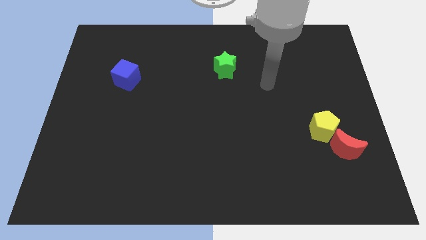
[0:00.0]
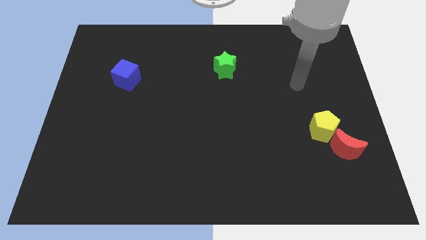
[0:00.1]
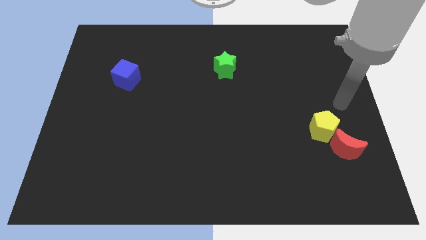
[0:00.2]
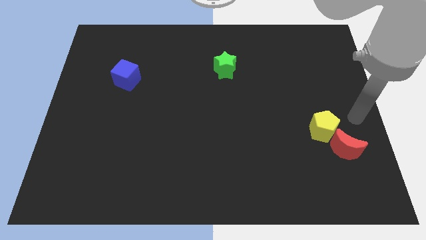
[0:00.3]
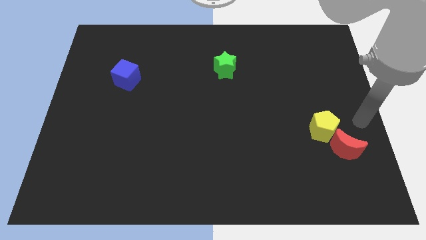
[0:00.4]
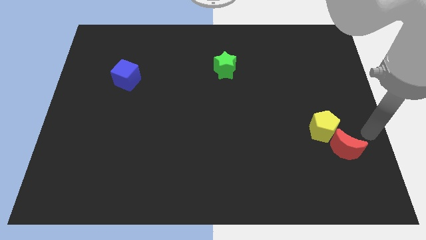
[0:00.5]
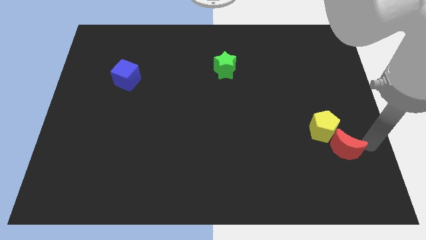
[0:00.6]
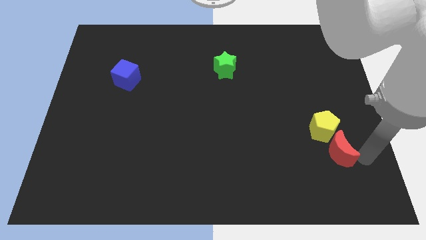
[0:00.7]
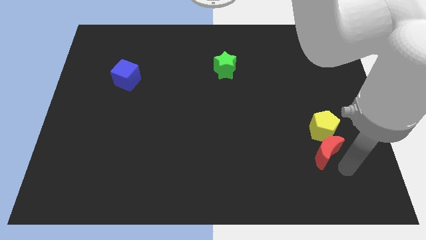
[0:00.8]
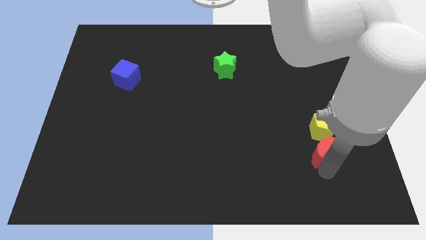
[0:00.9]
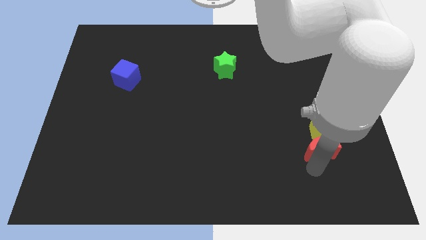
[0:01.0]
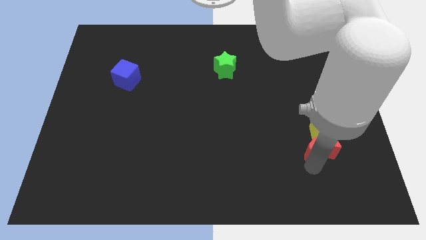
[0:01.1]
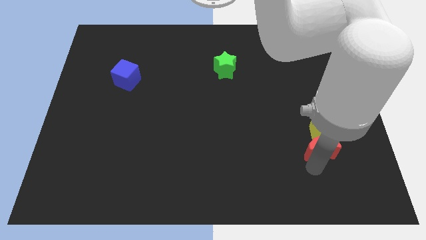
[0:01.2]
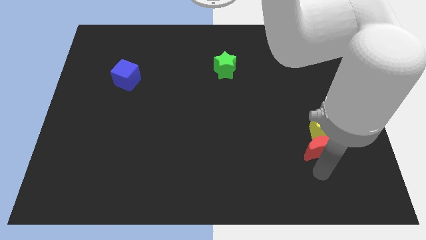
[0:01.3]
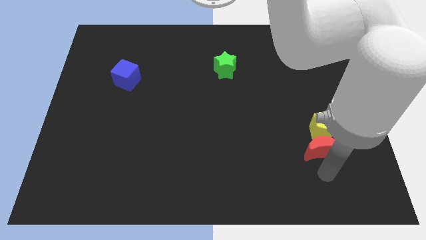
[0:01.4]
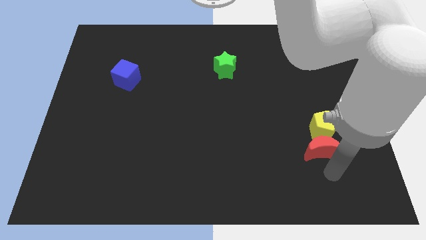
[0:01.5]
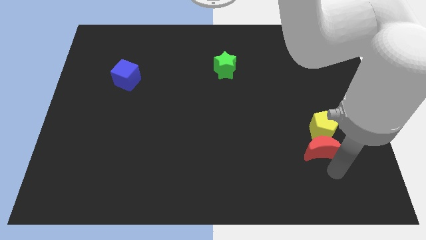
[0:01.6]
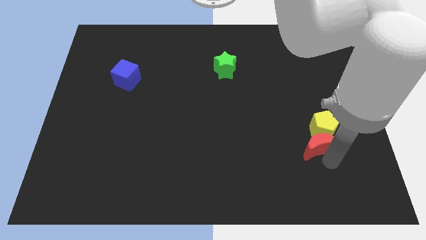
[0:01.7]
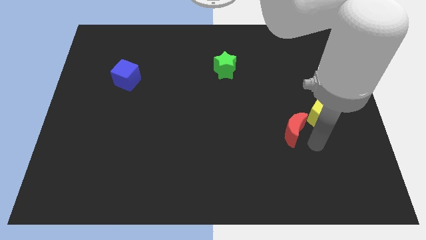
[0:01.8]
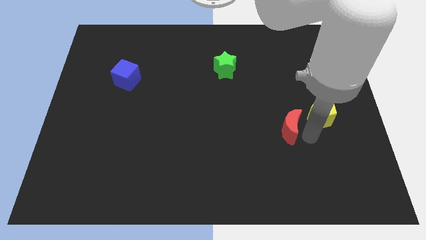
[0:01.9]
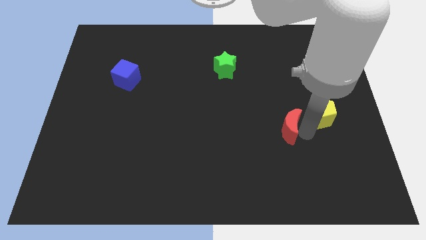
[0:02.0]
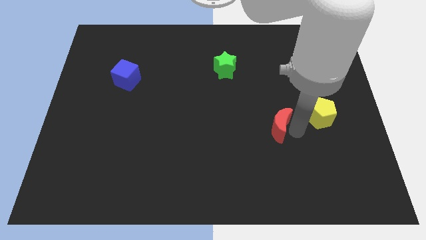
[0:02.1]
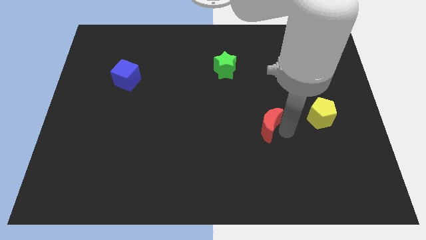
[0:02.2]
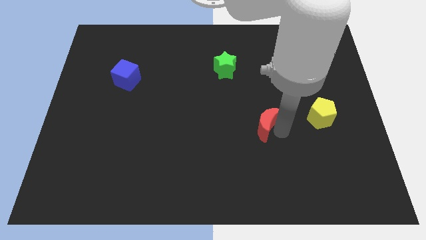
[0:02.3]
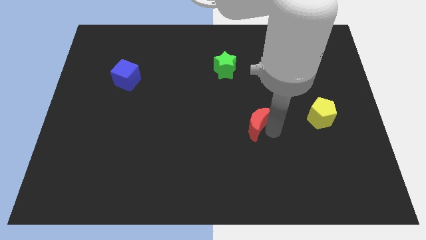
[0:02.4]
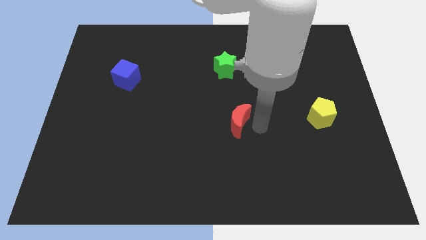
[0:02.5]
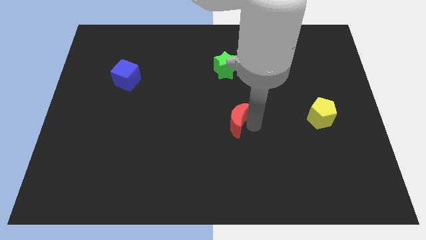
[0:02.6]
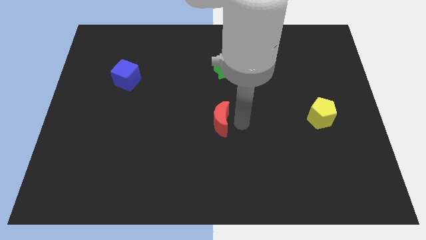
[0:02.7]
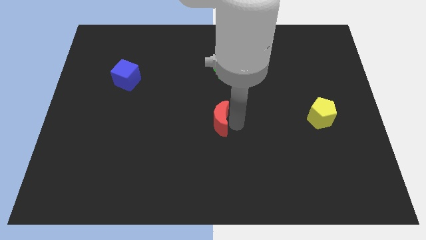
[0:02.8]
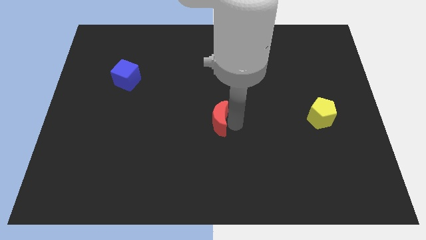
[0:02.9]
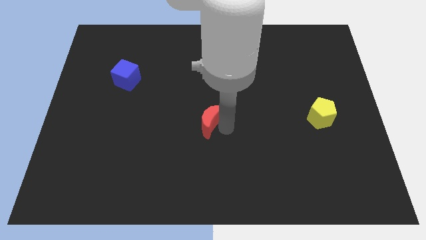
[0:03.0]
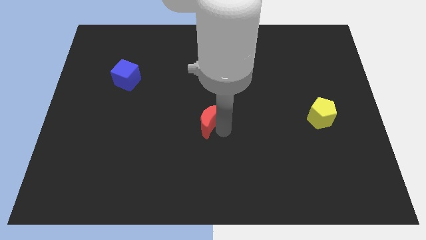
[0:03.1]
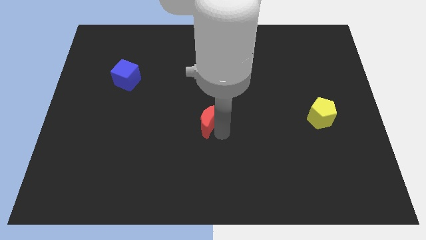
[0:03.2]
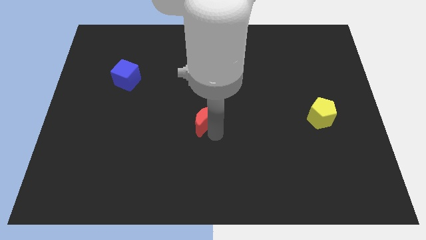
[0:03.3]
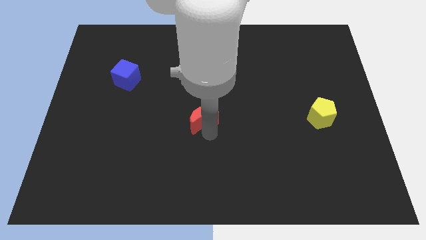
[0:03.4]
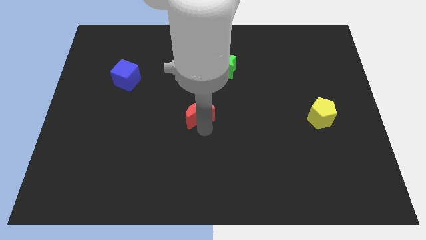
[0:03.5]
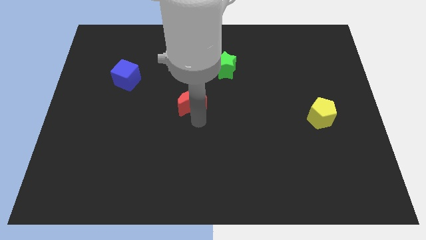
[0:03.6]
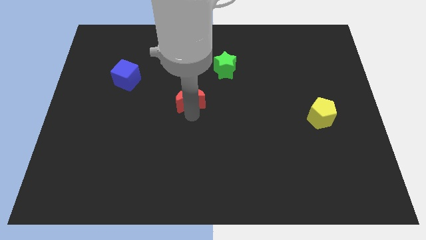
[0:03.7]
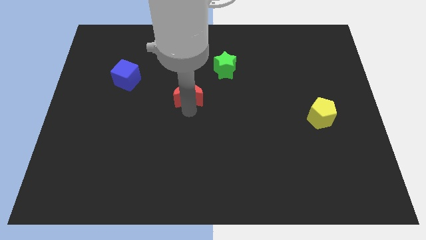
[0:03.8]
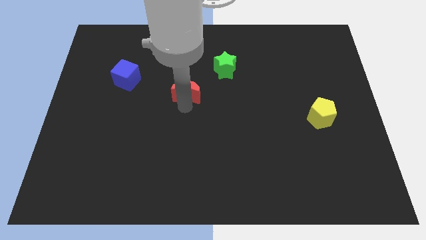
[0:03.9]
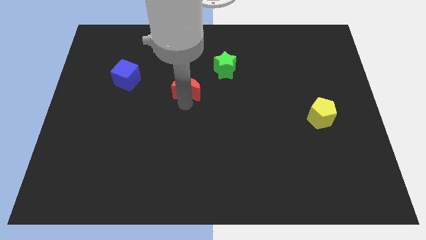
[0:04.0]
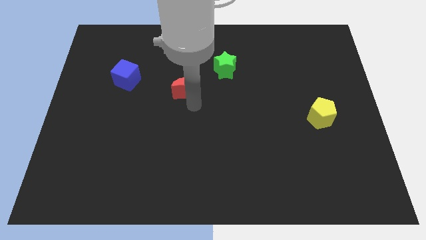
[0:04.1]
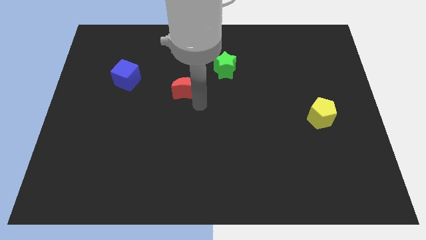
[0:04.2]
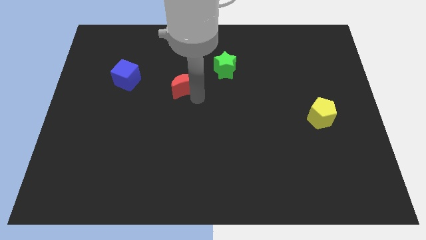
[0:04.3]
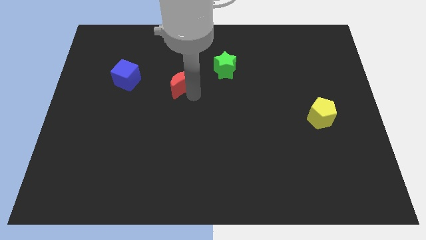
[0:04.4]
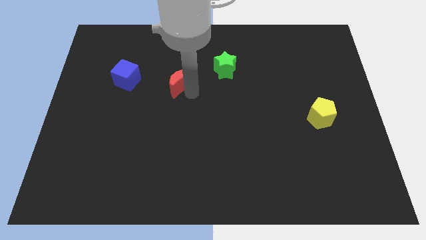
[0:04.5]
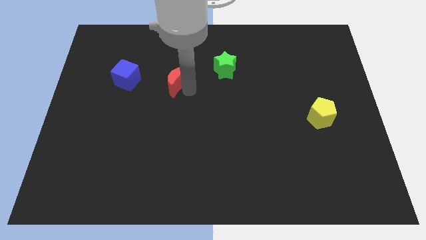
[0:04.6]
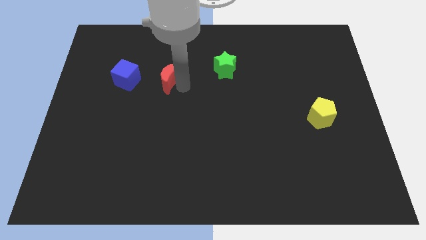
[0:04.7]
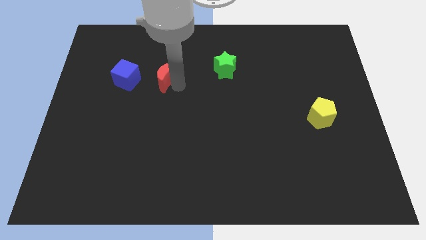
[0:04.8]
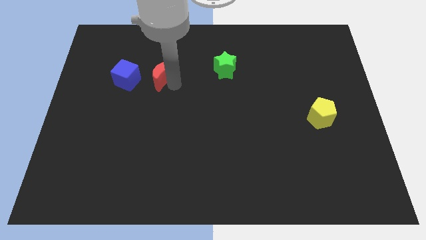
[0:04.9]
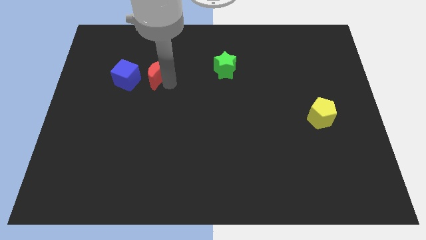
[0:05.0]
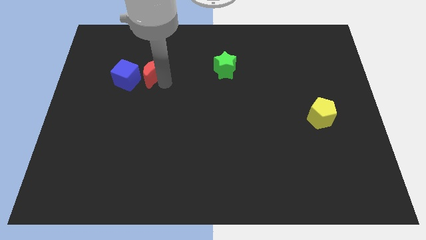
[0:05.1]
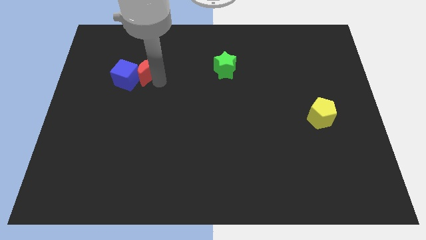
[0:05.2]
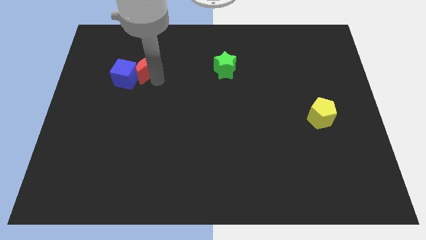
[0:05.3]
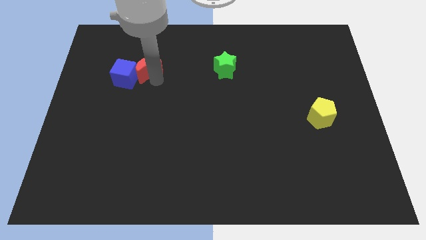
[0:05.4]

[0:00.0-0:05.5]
slide the red moon next to the blue block

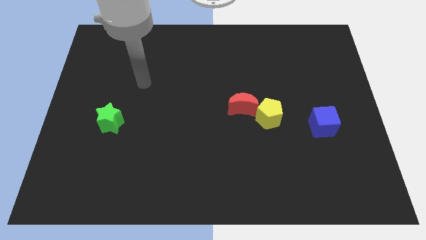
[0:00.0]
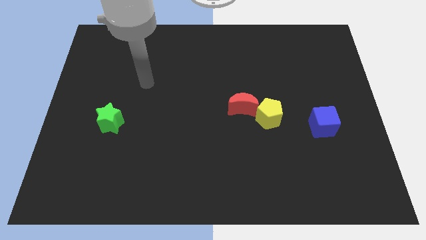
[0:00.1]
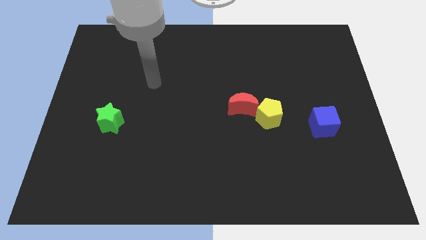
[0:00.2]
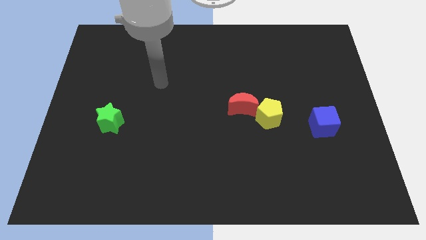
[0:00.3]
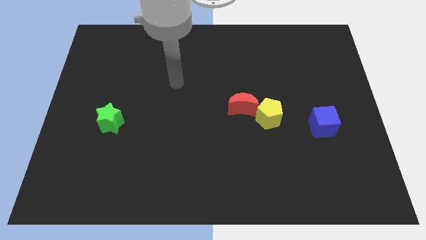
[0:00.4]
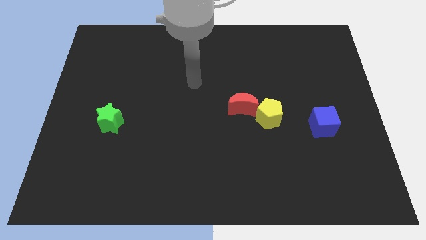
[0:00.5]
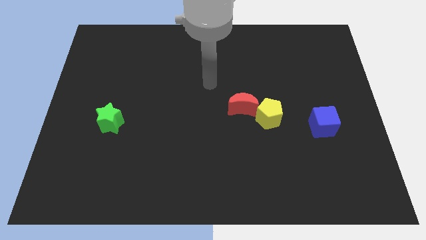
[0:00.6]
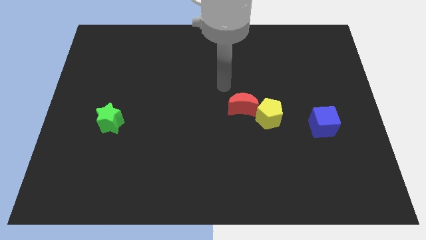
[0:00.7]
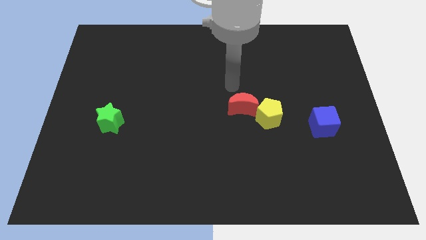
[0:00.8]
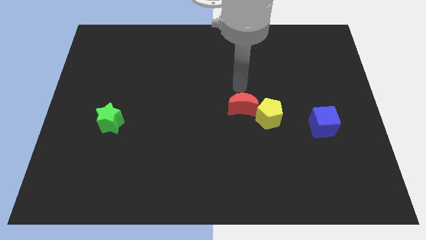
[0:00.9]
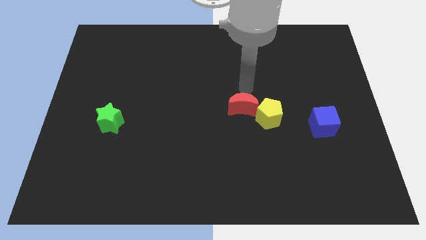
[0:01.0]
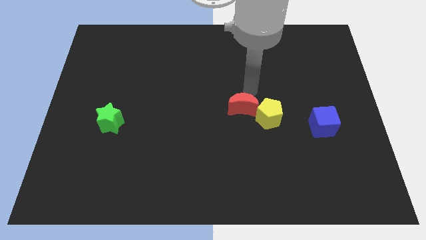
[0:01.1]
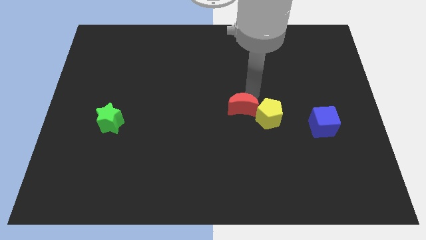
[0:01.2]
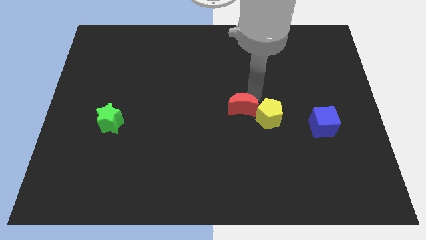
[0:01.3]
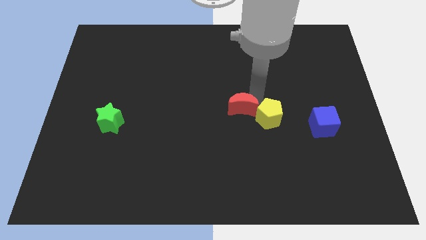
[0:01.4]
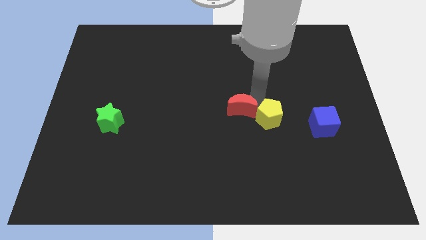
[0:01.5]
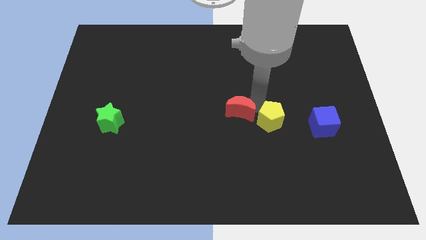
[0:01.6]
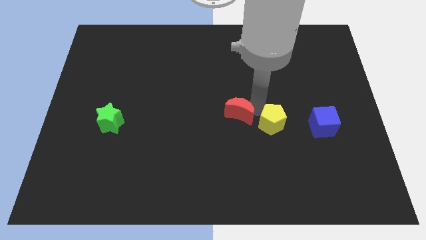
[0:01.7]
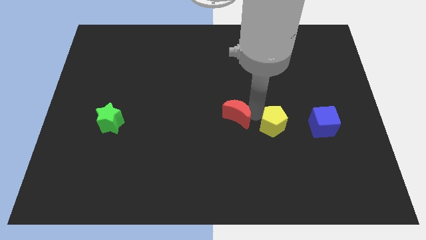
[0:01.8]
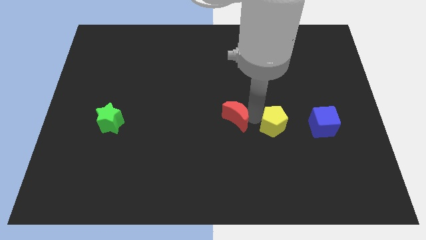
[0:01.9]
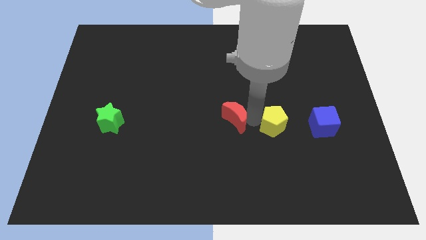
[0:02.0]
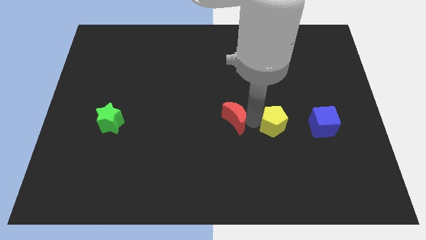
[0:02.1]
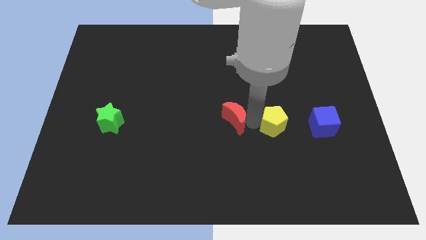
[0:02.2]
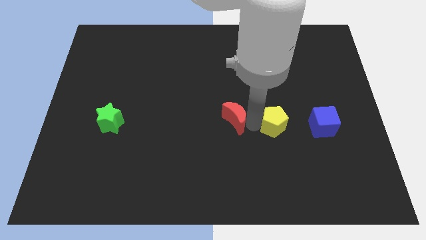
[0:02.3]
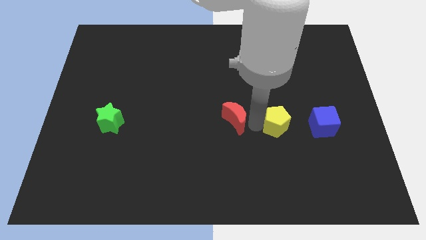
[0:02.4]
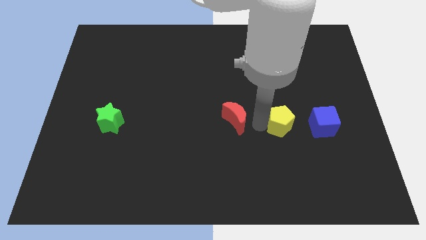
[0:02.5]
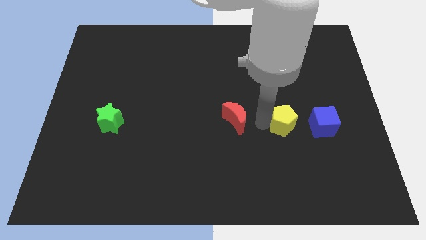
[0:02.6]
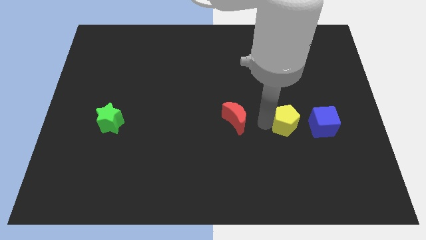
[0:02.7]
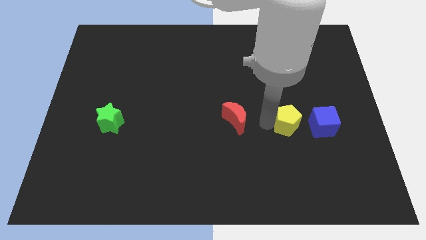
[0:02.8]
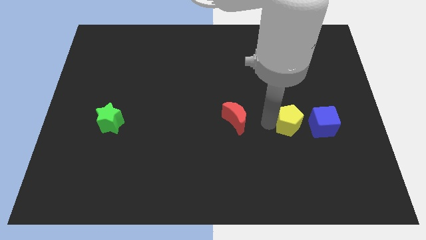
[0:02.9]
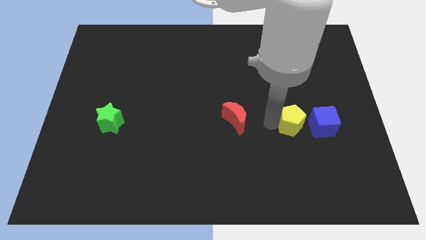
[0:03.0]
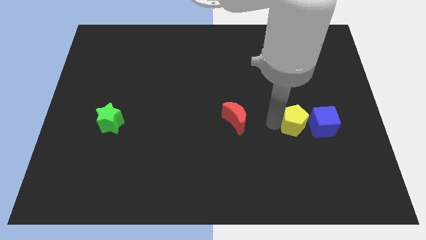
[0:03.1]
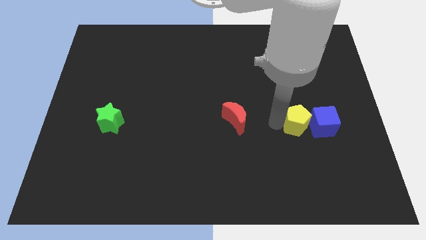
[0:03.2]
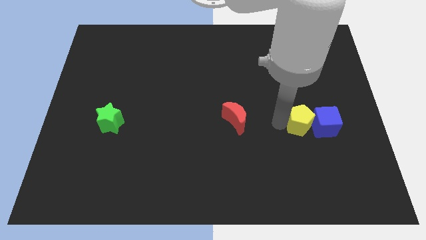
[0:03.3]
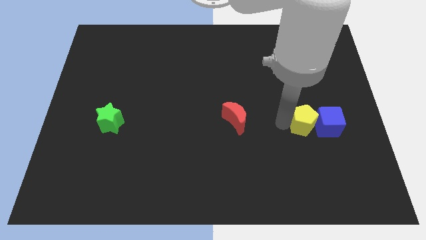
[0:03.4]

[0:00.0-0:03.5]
put the yellow pentagon next to the cube
